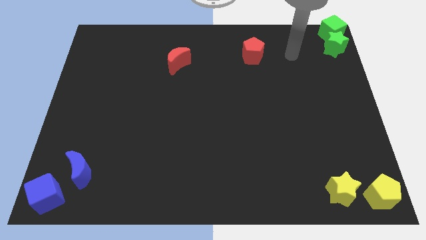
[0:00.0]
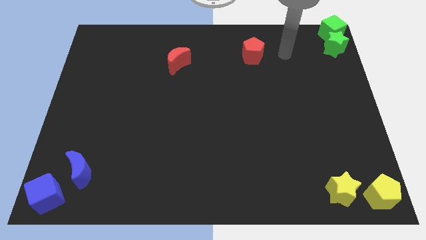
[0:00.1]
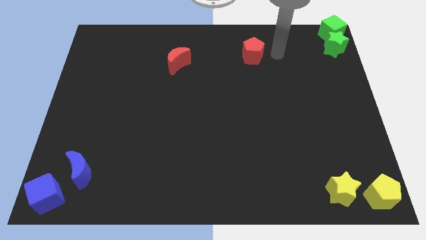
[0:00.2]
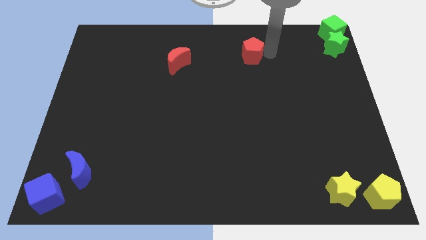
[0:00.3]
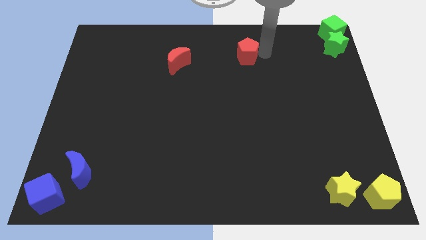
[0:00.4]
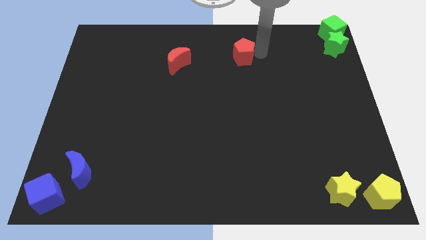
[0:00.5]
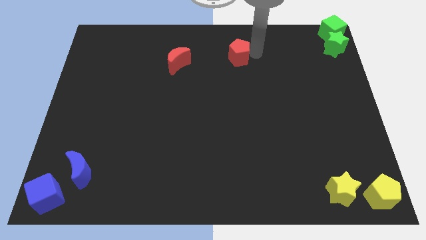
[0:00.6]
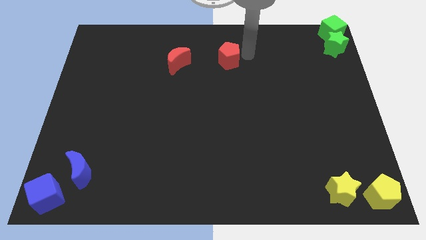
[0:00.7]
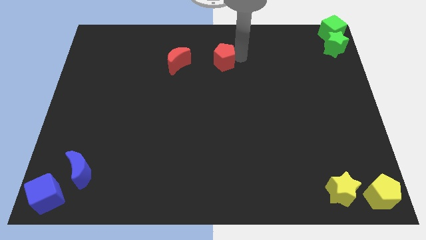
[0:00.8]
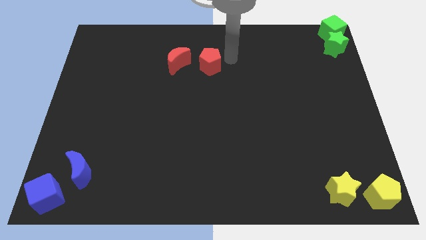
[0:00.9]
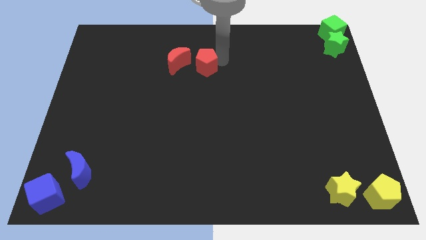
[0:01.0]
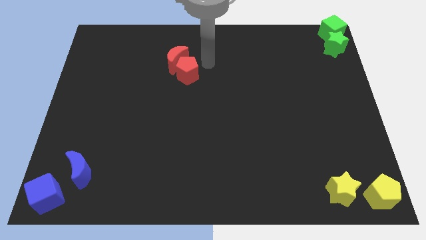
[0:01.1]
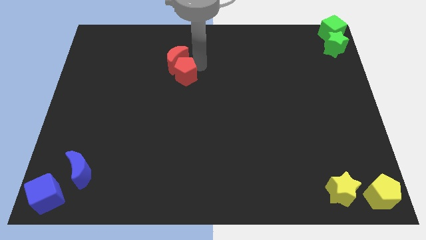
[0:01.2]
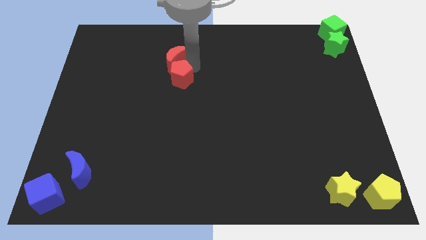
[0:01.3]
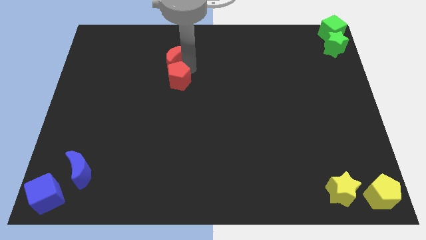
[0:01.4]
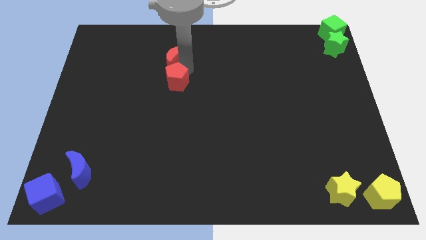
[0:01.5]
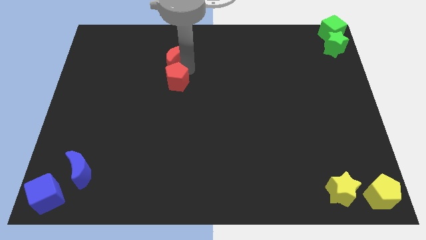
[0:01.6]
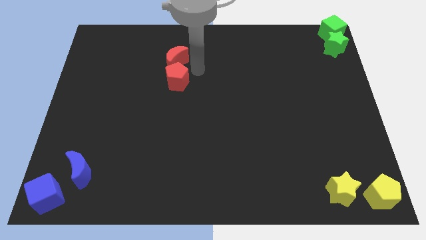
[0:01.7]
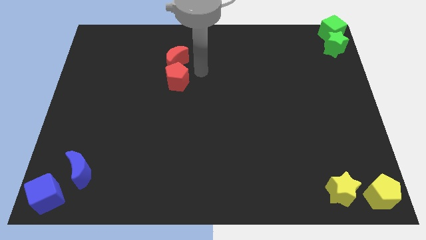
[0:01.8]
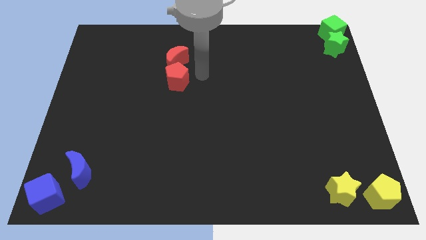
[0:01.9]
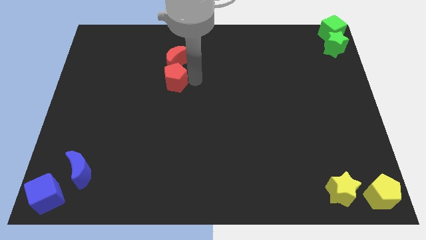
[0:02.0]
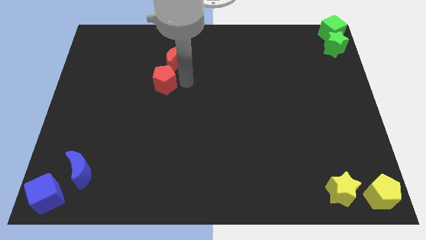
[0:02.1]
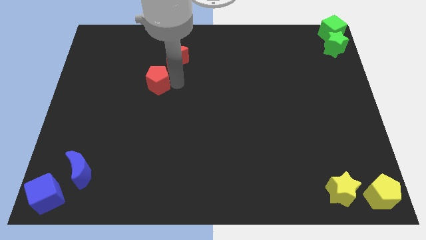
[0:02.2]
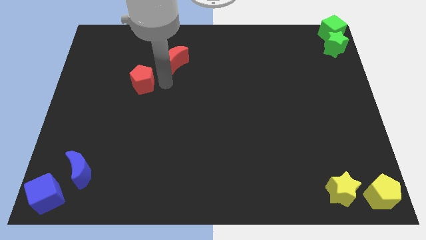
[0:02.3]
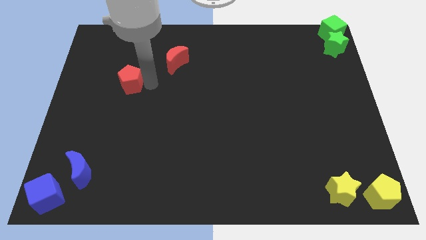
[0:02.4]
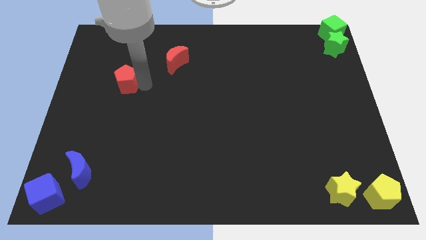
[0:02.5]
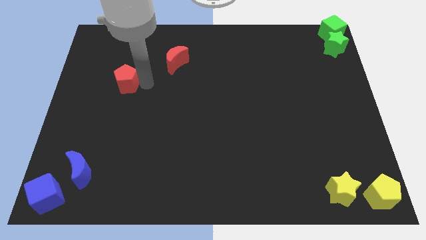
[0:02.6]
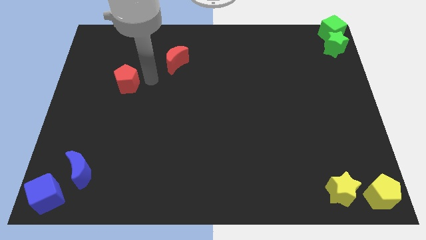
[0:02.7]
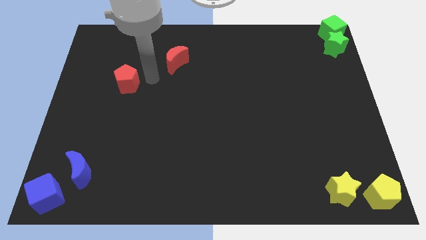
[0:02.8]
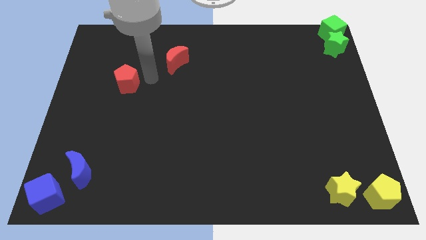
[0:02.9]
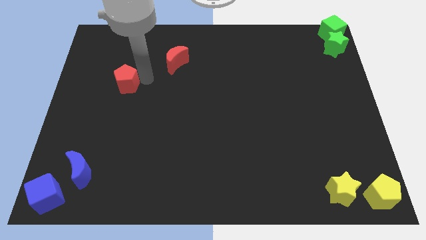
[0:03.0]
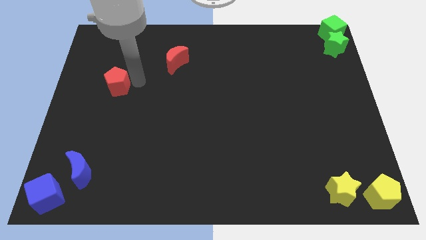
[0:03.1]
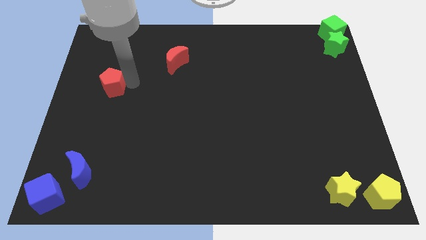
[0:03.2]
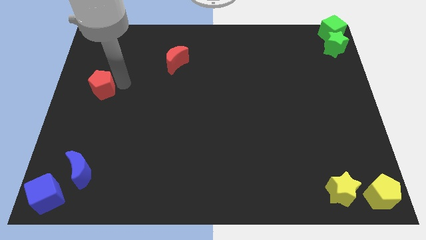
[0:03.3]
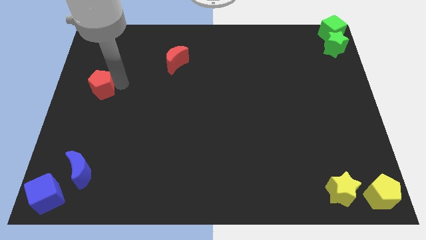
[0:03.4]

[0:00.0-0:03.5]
slide the red pentagon diagonally bottom left to the red moon

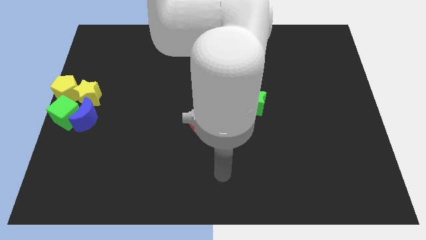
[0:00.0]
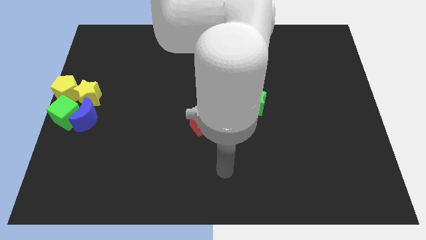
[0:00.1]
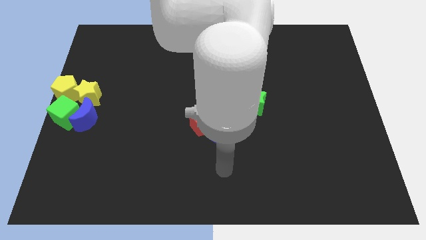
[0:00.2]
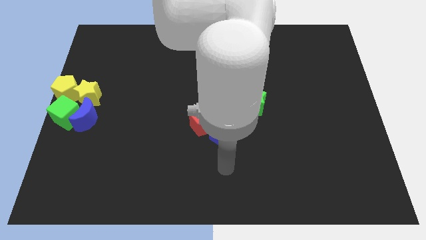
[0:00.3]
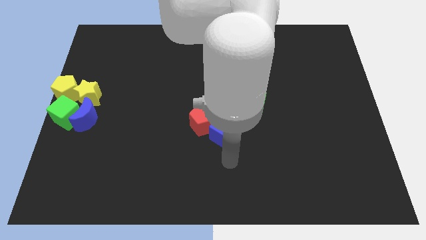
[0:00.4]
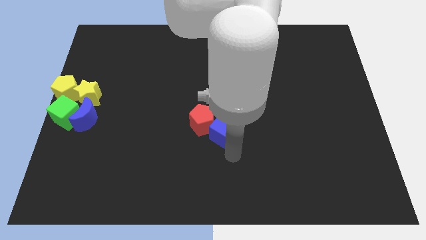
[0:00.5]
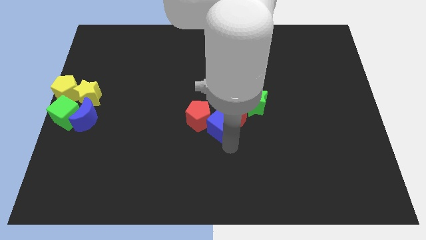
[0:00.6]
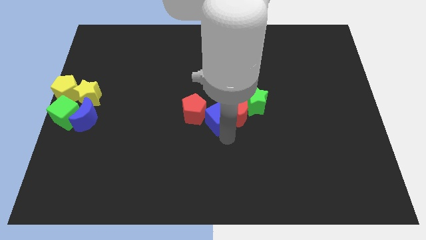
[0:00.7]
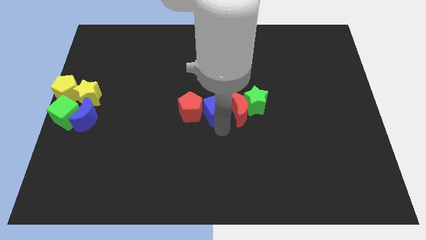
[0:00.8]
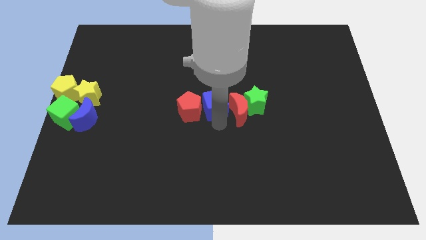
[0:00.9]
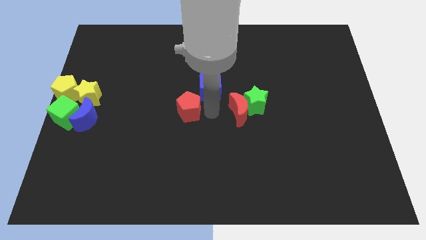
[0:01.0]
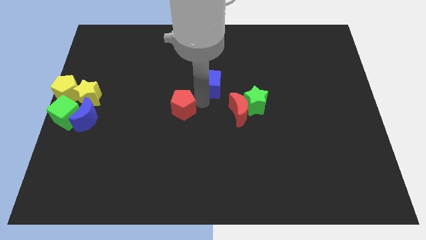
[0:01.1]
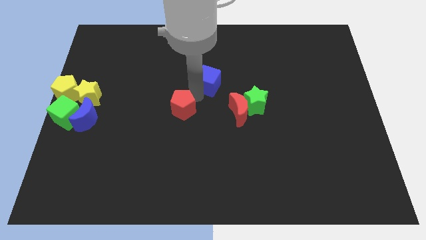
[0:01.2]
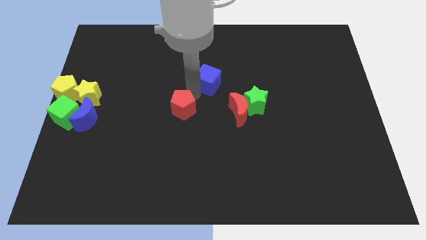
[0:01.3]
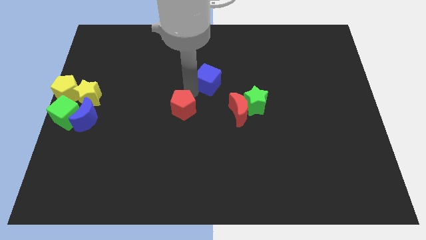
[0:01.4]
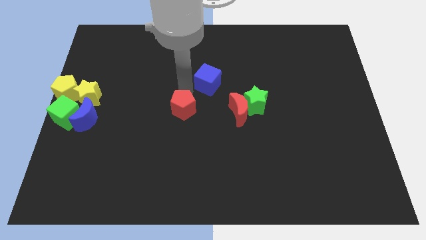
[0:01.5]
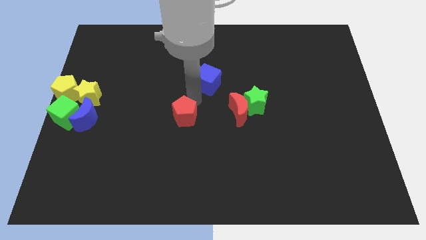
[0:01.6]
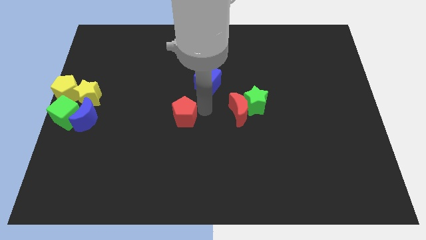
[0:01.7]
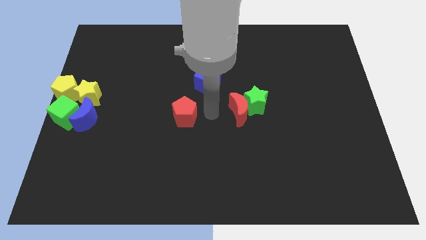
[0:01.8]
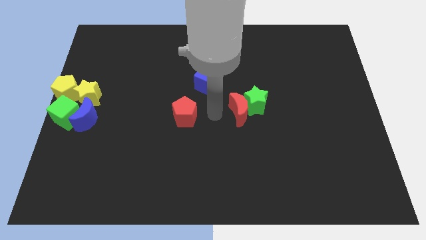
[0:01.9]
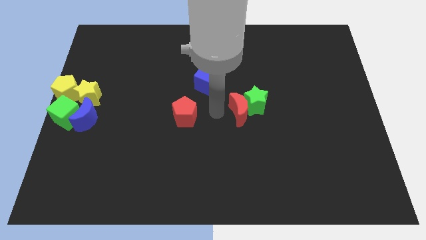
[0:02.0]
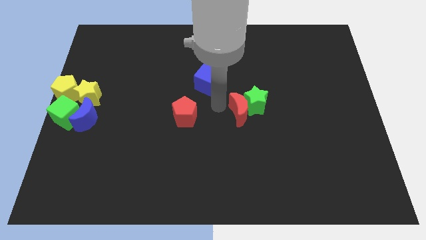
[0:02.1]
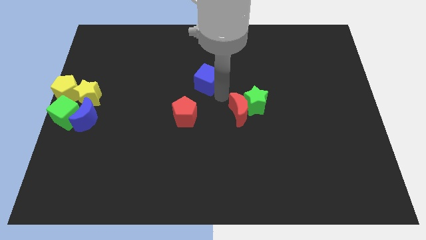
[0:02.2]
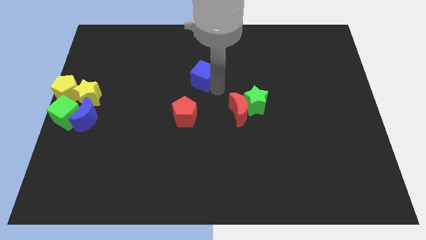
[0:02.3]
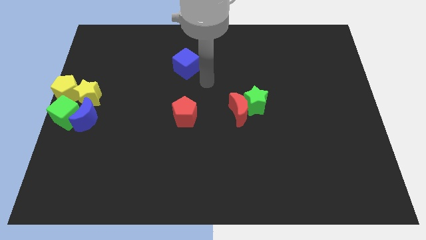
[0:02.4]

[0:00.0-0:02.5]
place the blue cube at the top of the red pentagon

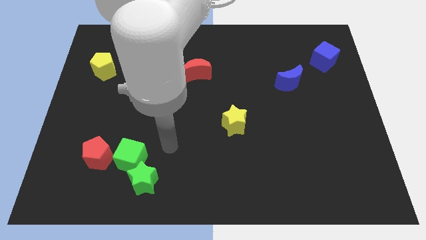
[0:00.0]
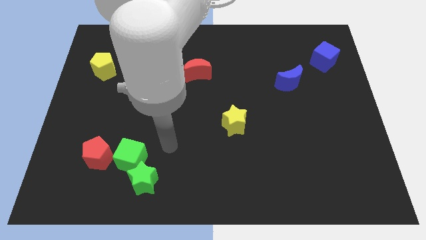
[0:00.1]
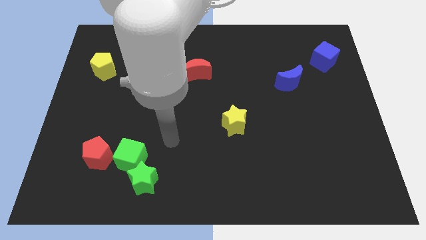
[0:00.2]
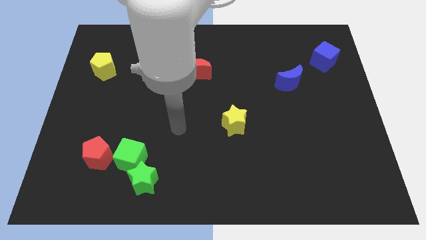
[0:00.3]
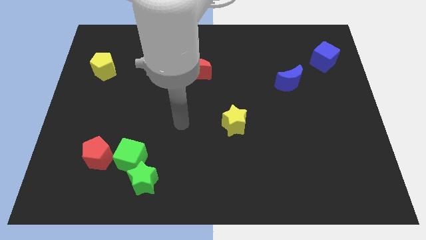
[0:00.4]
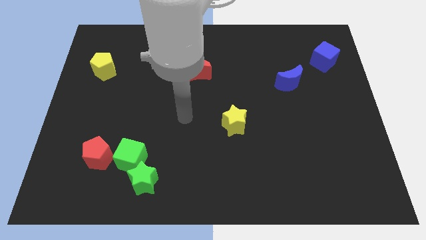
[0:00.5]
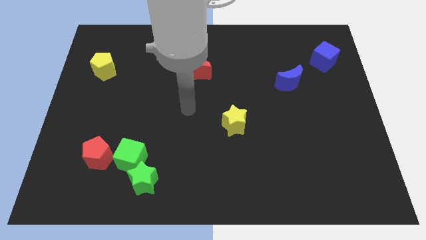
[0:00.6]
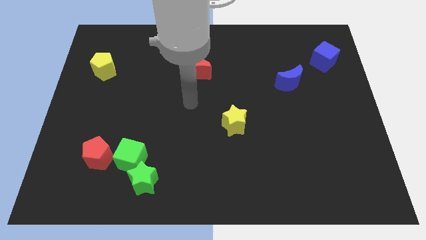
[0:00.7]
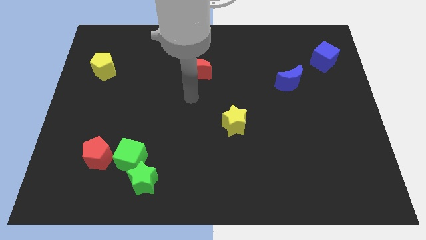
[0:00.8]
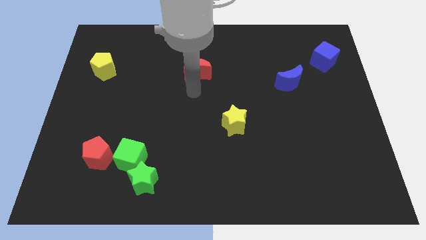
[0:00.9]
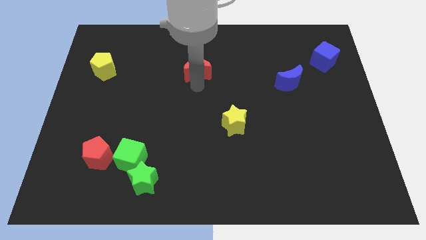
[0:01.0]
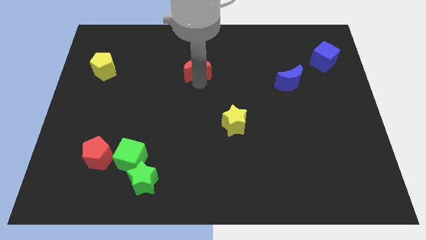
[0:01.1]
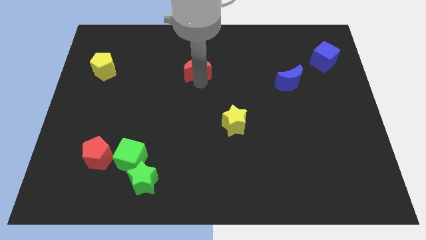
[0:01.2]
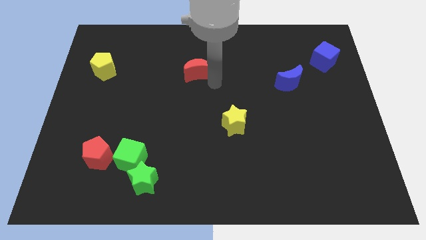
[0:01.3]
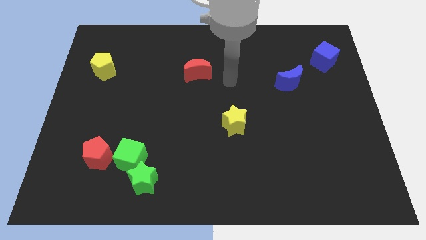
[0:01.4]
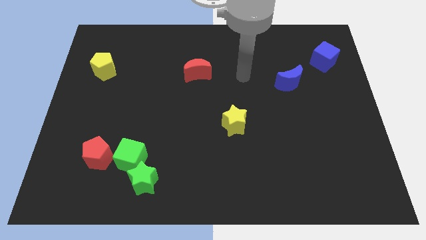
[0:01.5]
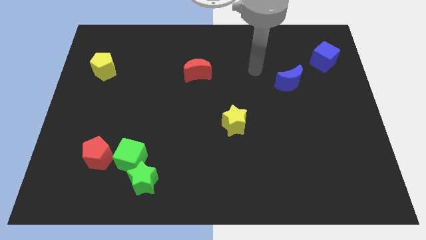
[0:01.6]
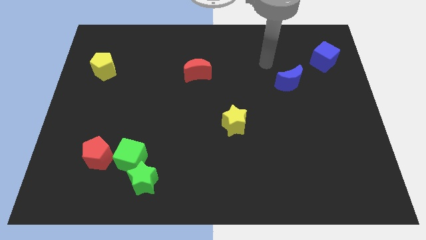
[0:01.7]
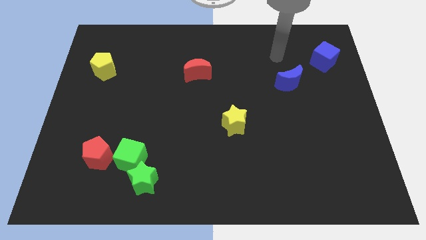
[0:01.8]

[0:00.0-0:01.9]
point your arm to the top of blue moon

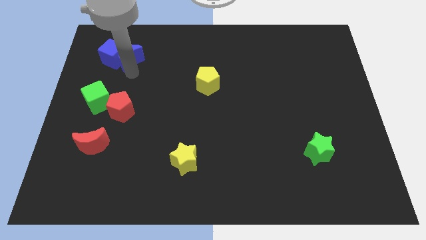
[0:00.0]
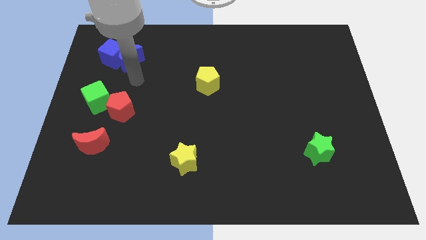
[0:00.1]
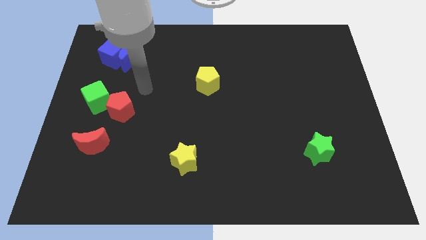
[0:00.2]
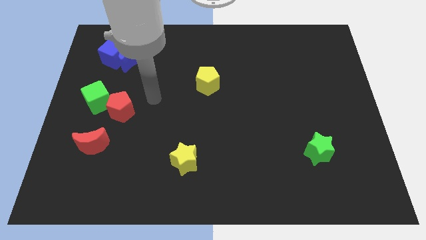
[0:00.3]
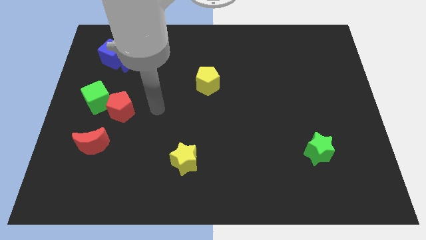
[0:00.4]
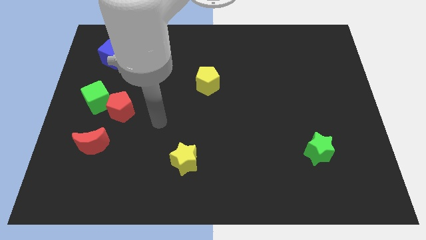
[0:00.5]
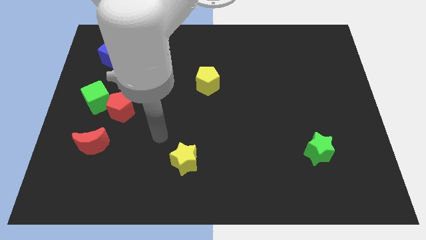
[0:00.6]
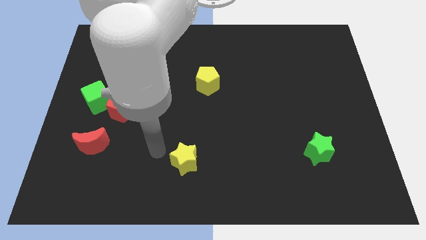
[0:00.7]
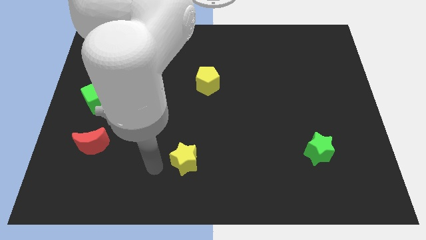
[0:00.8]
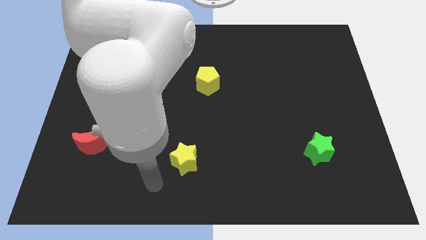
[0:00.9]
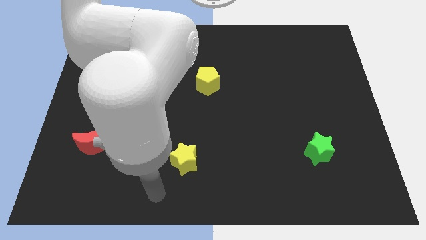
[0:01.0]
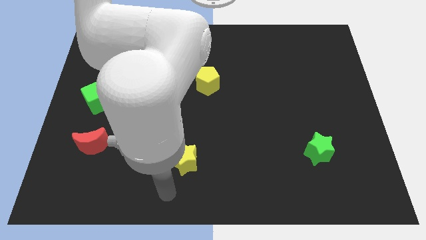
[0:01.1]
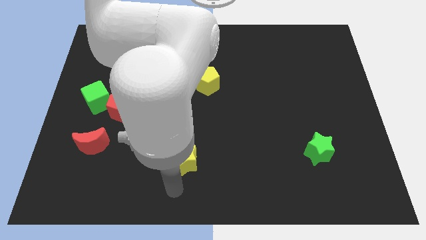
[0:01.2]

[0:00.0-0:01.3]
move your hand towards the yellow star
